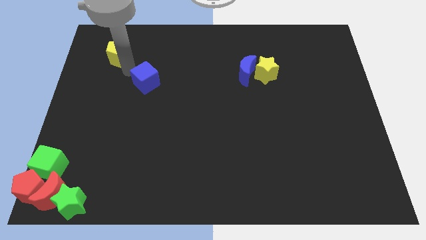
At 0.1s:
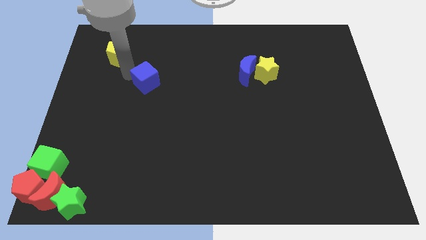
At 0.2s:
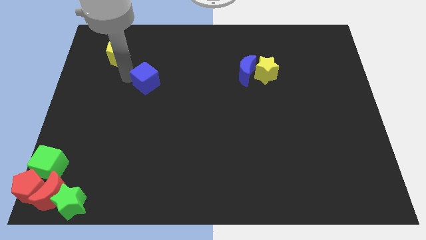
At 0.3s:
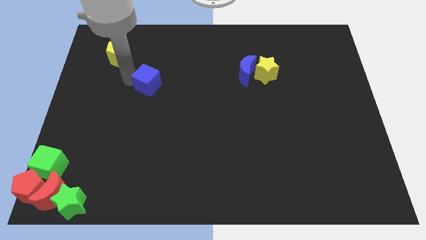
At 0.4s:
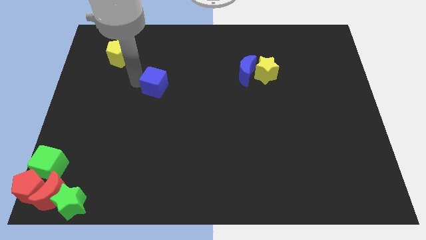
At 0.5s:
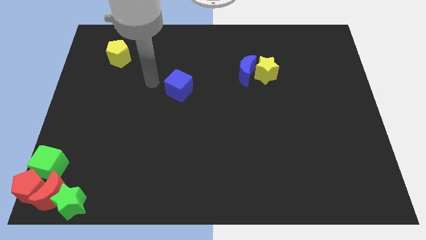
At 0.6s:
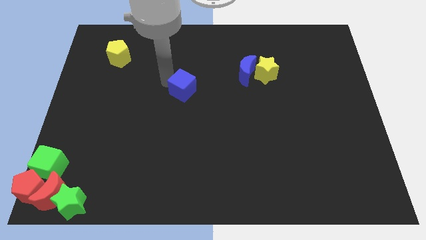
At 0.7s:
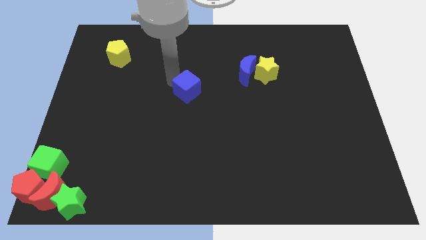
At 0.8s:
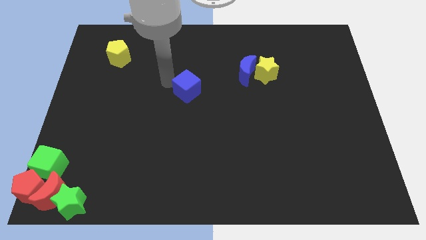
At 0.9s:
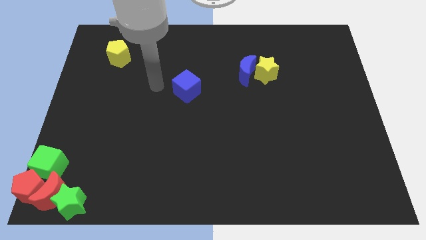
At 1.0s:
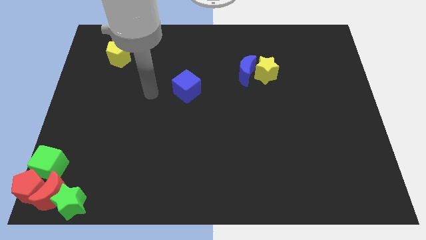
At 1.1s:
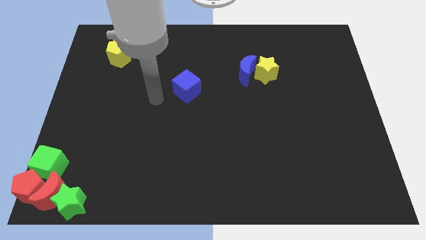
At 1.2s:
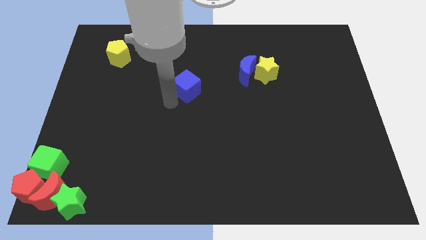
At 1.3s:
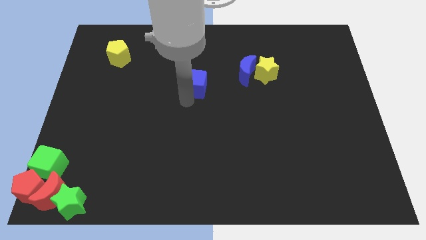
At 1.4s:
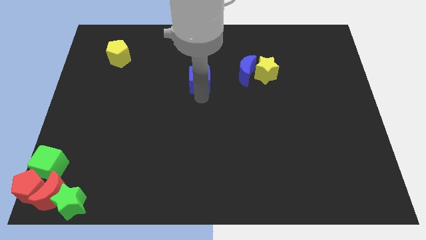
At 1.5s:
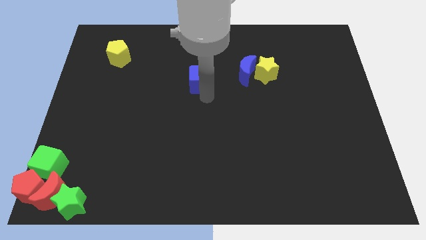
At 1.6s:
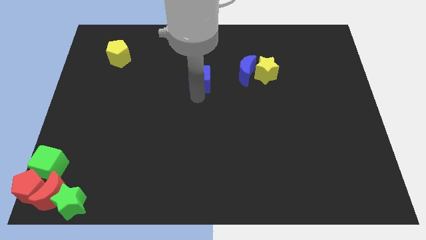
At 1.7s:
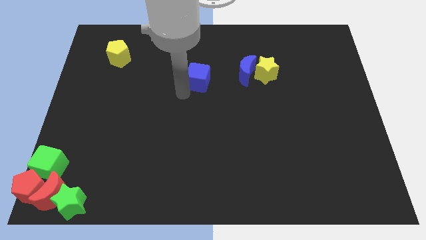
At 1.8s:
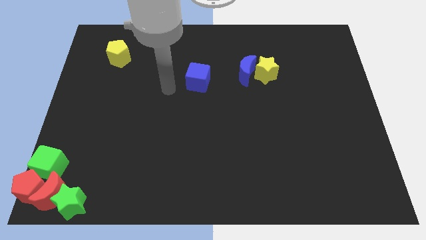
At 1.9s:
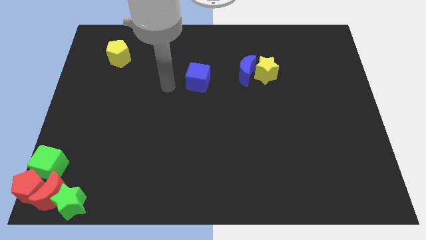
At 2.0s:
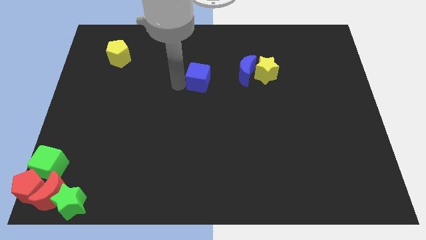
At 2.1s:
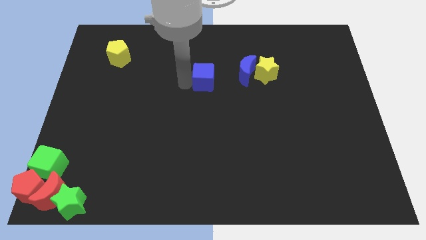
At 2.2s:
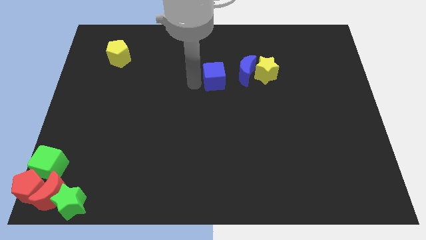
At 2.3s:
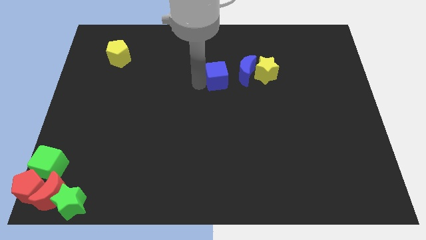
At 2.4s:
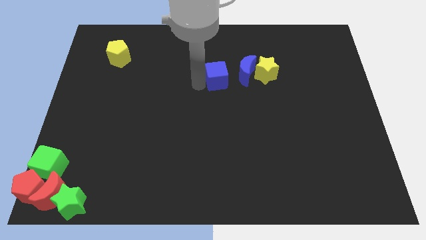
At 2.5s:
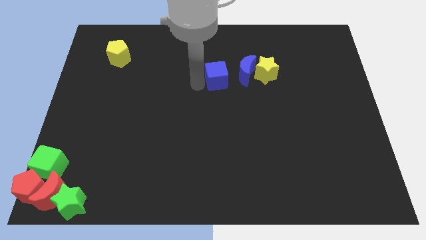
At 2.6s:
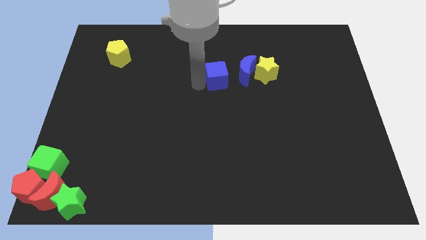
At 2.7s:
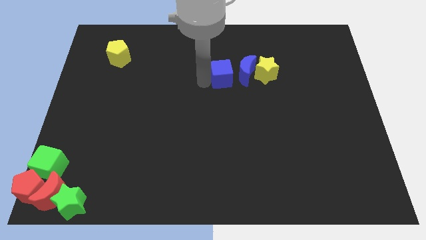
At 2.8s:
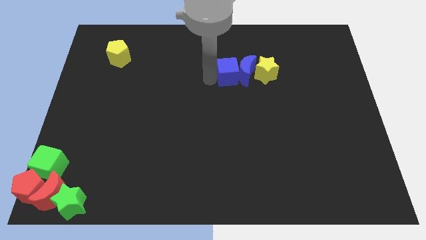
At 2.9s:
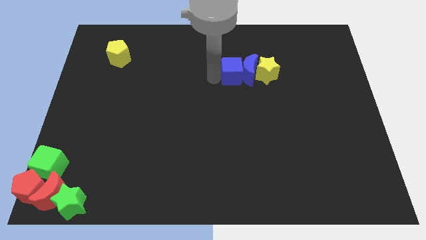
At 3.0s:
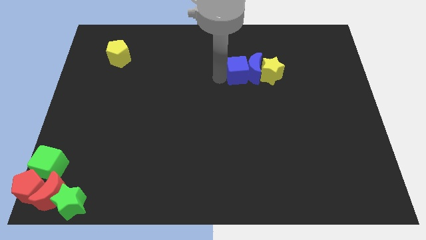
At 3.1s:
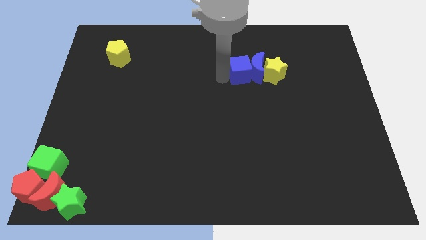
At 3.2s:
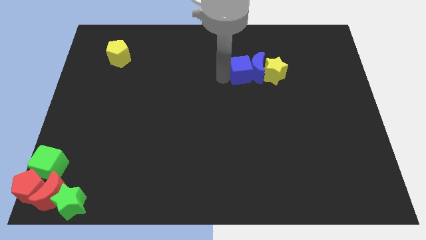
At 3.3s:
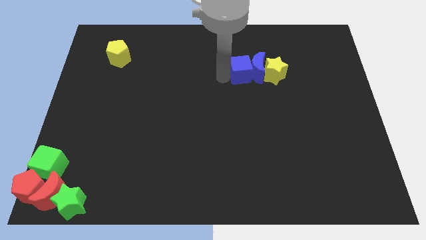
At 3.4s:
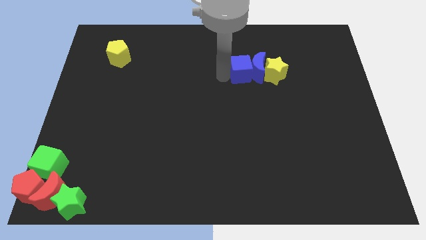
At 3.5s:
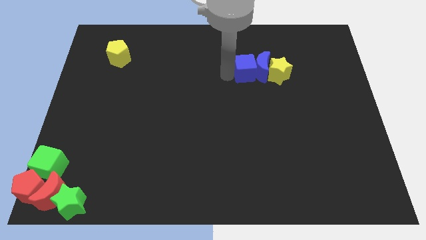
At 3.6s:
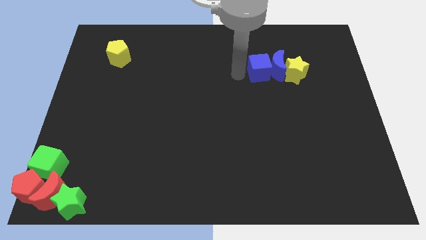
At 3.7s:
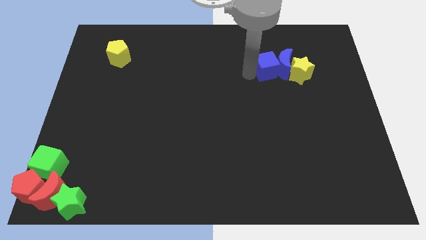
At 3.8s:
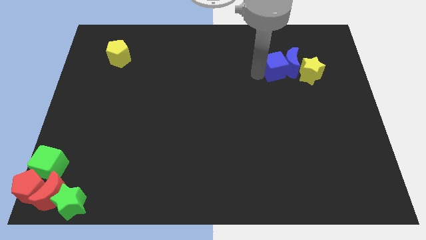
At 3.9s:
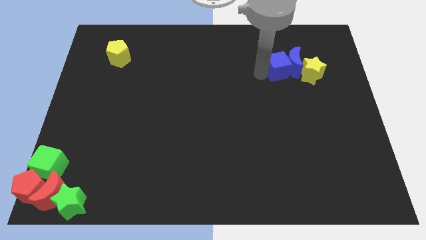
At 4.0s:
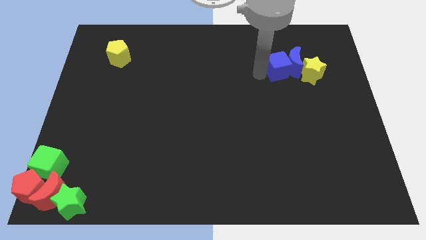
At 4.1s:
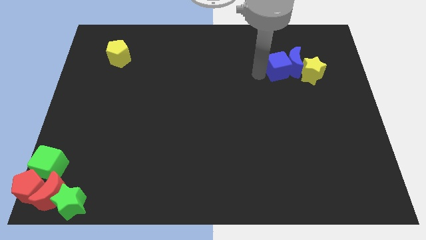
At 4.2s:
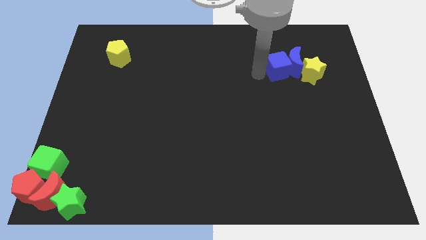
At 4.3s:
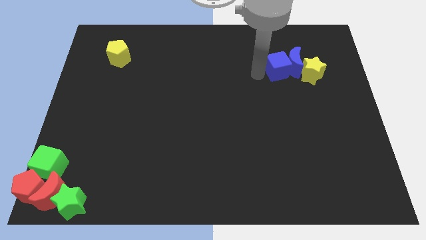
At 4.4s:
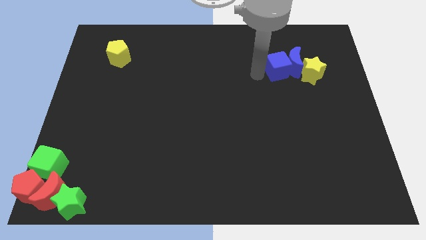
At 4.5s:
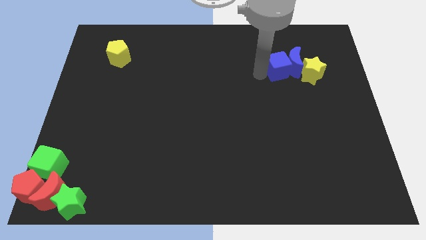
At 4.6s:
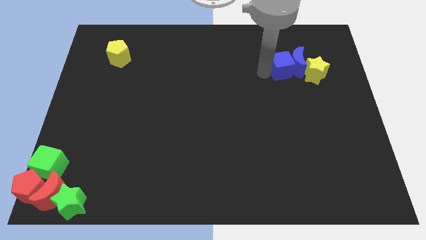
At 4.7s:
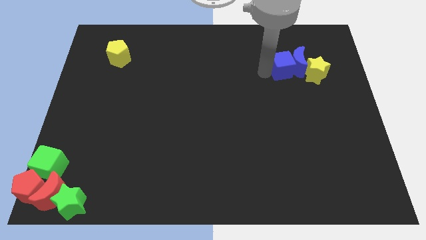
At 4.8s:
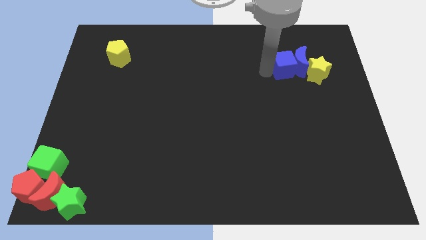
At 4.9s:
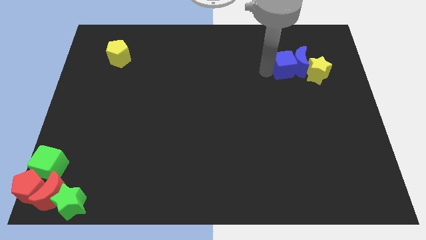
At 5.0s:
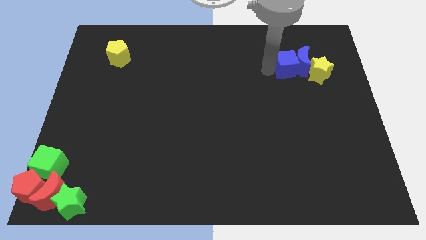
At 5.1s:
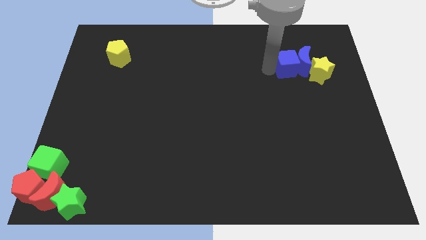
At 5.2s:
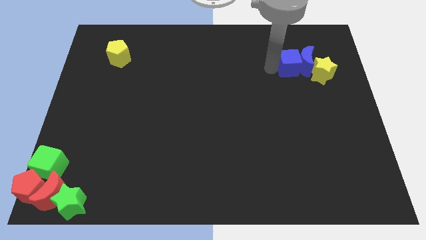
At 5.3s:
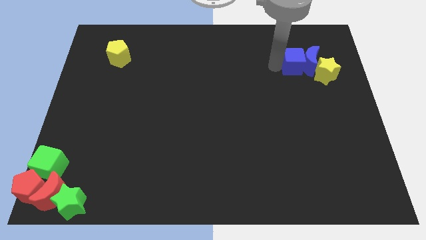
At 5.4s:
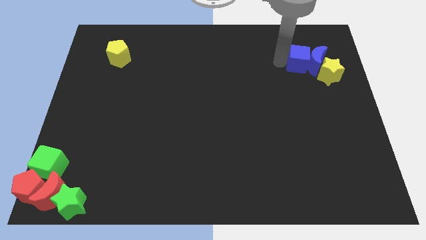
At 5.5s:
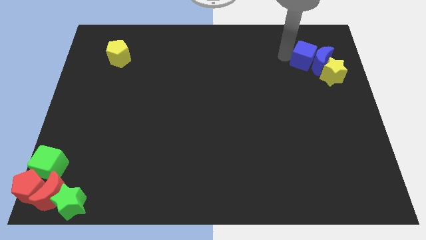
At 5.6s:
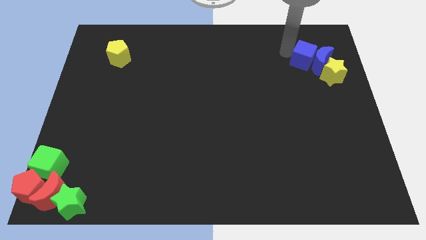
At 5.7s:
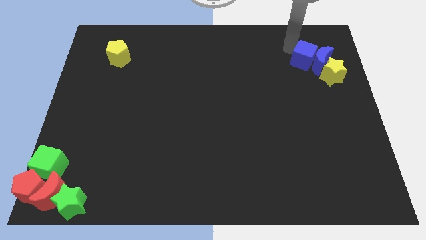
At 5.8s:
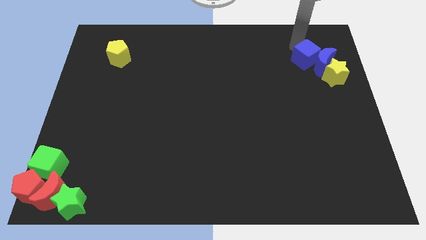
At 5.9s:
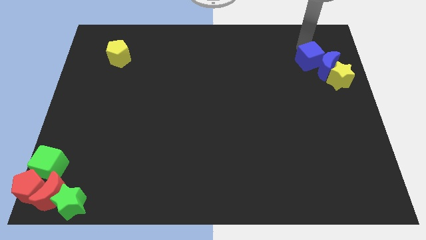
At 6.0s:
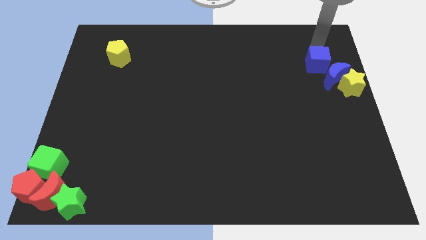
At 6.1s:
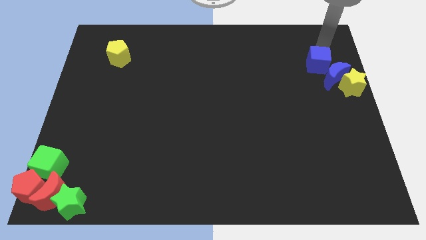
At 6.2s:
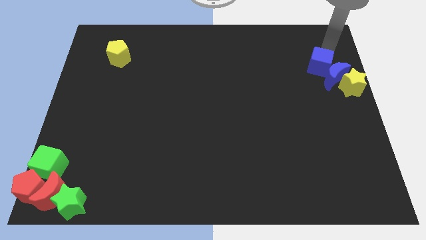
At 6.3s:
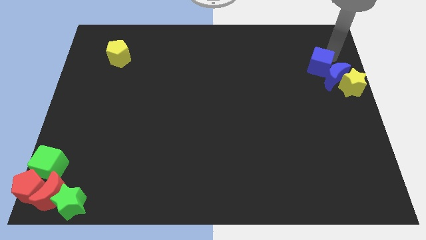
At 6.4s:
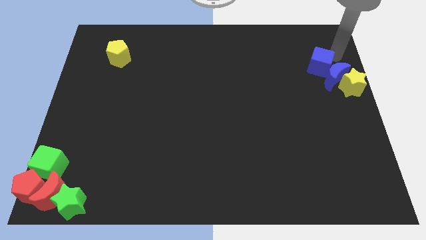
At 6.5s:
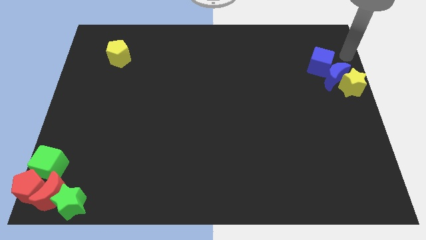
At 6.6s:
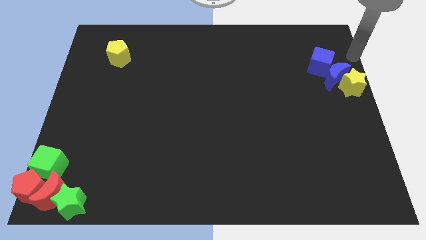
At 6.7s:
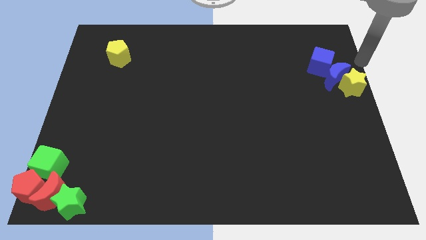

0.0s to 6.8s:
push the blue crescent and yellow star to the top right corner of the board with the help of blue cube

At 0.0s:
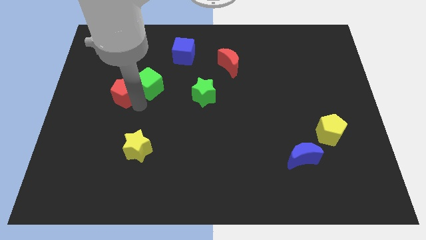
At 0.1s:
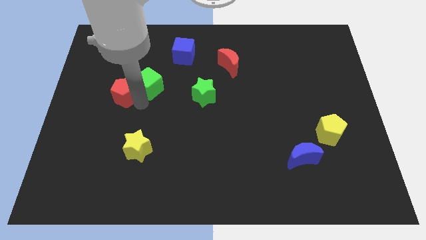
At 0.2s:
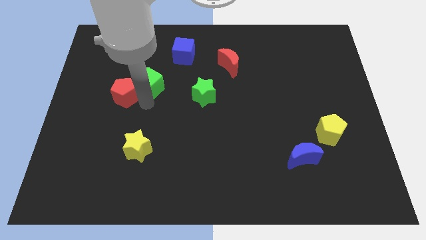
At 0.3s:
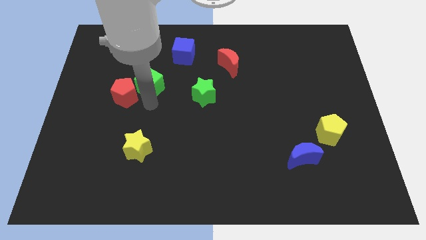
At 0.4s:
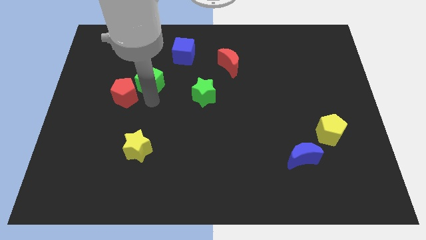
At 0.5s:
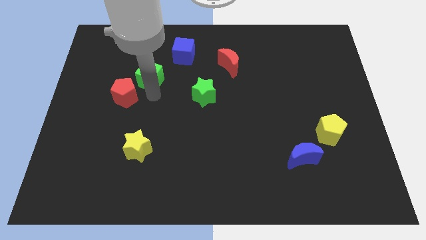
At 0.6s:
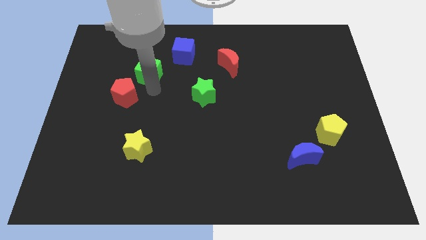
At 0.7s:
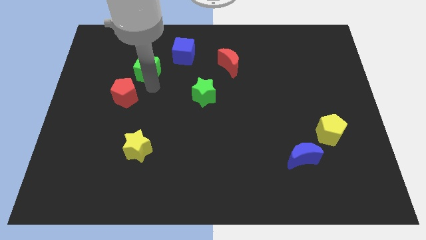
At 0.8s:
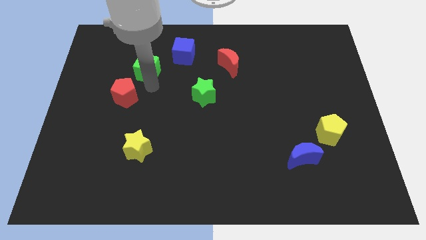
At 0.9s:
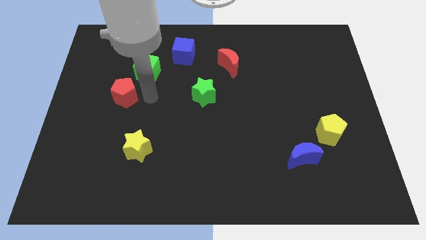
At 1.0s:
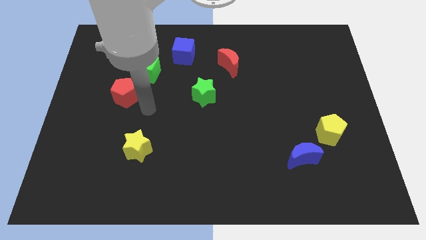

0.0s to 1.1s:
separate the green cube and the red pentagon

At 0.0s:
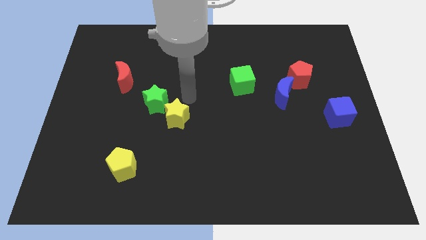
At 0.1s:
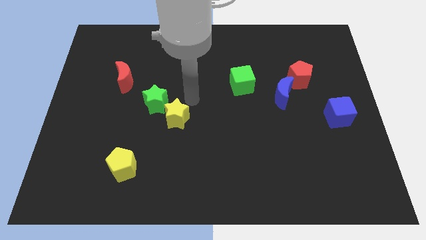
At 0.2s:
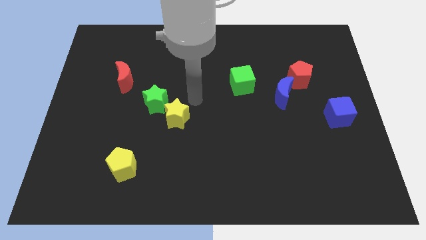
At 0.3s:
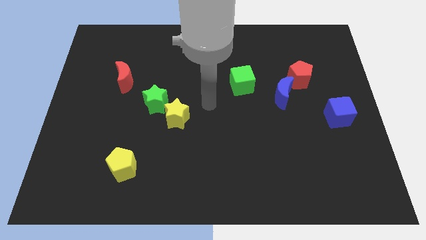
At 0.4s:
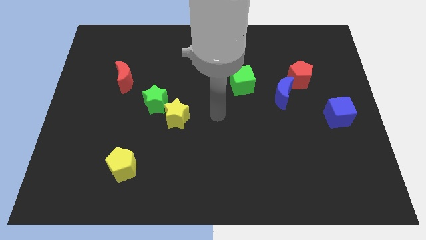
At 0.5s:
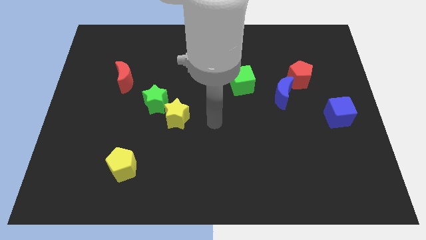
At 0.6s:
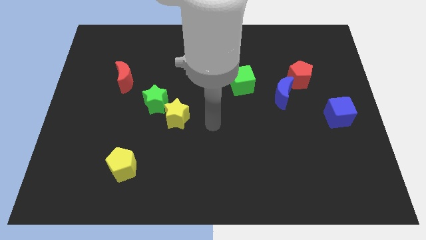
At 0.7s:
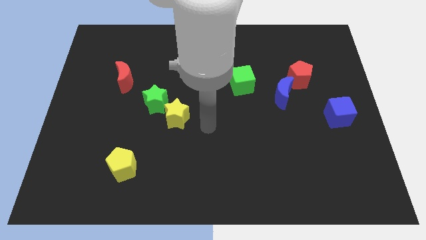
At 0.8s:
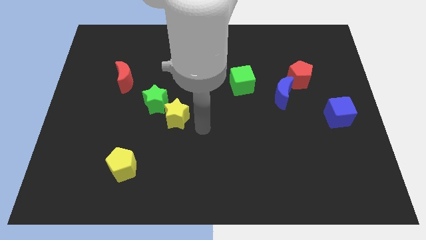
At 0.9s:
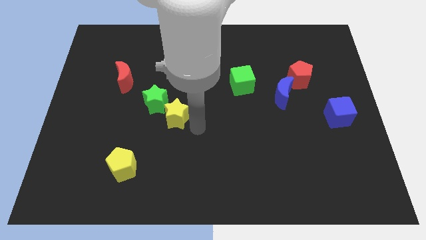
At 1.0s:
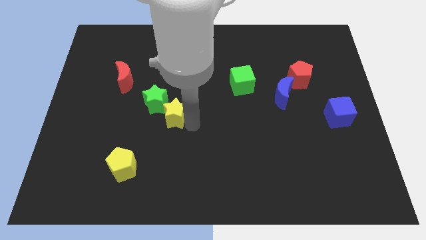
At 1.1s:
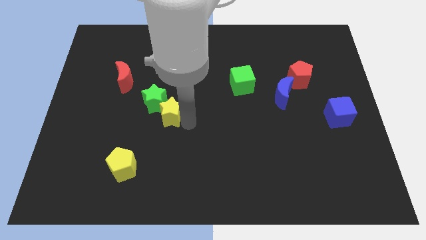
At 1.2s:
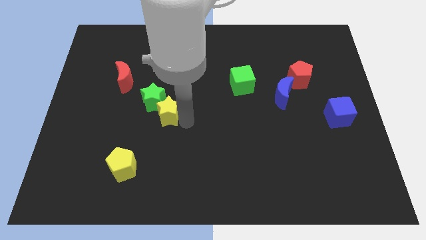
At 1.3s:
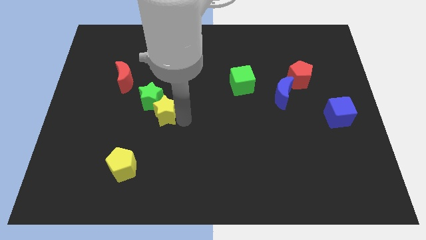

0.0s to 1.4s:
push the yellow star into the green star
